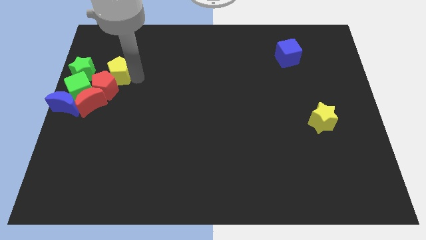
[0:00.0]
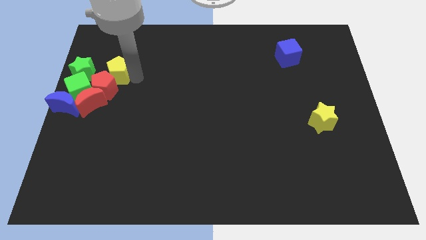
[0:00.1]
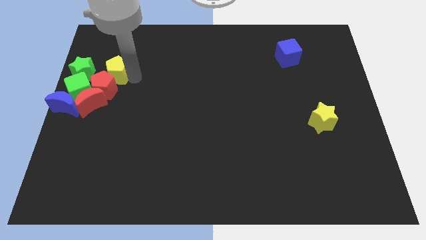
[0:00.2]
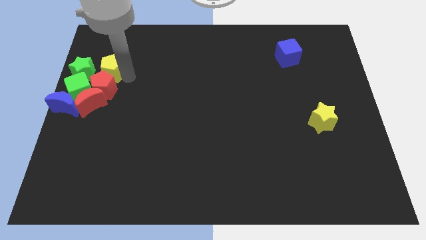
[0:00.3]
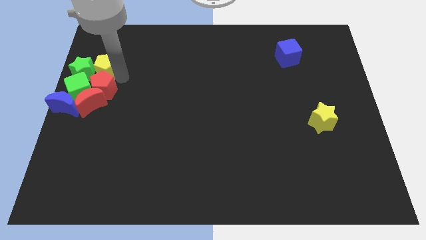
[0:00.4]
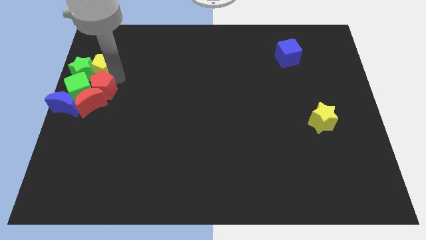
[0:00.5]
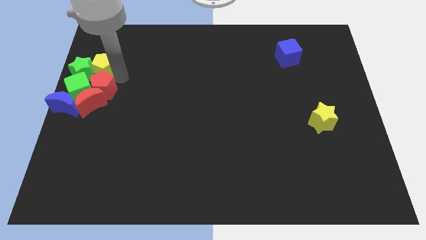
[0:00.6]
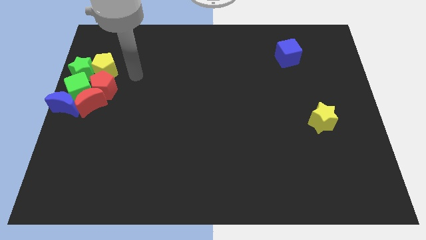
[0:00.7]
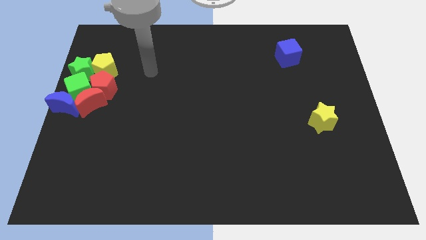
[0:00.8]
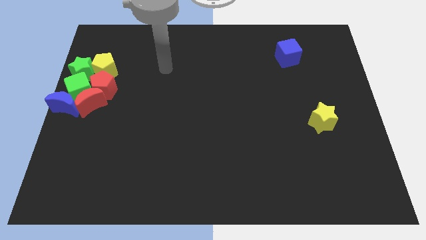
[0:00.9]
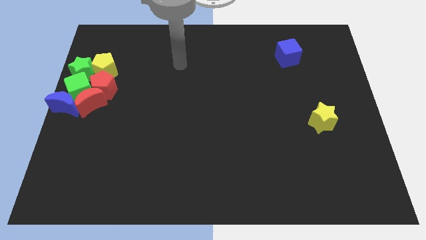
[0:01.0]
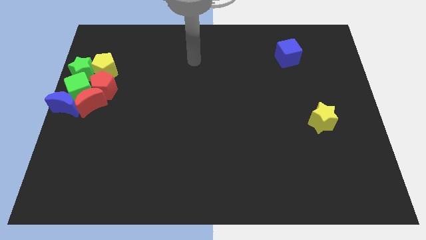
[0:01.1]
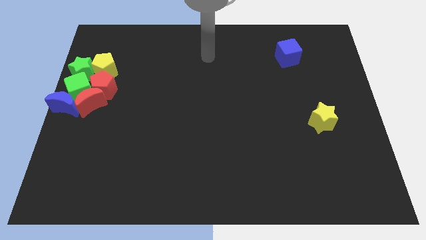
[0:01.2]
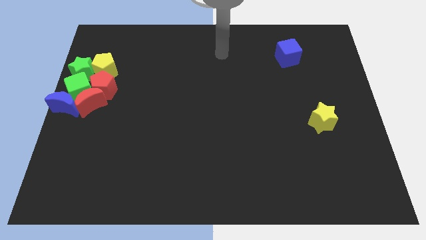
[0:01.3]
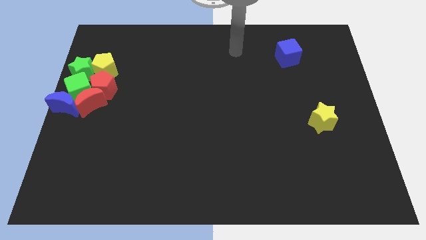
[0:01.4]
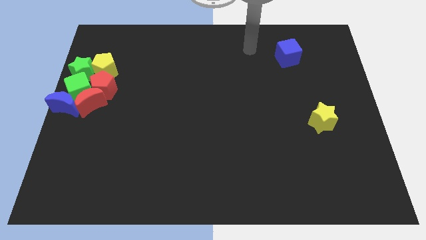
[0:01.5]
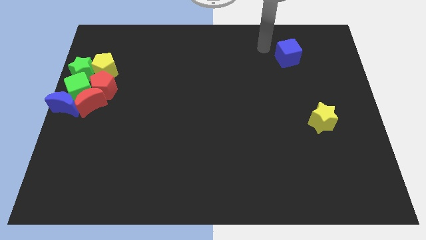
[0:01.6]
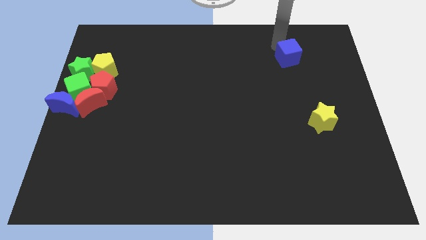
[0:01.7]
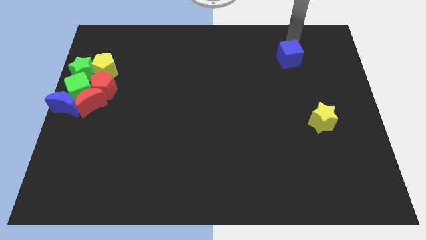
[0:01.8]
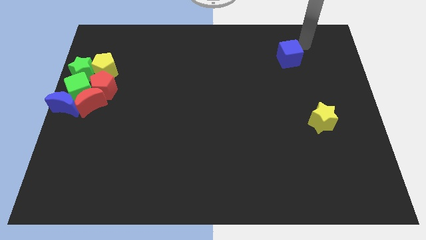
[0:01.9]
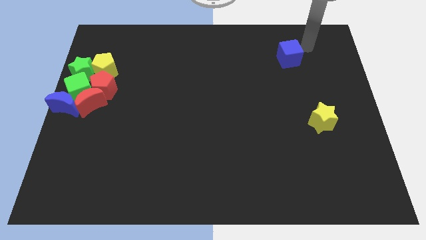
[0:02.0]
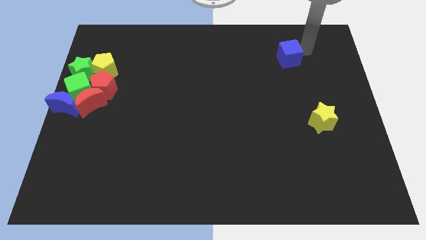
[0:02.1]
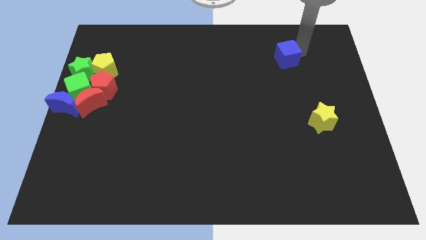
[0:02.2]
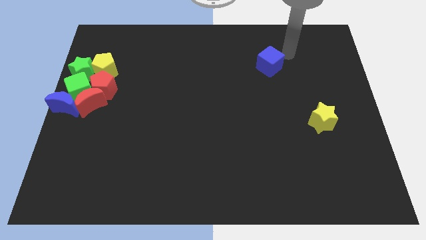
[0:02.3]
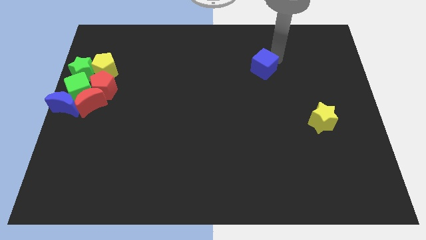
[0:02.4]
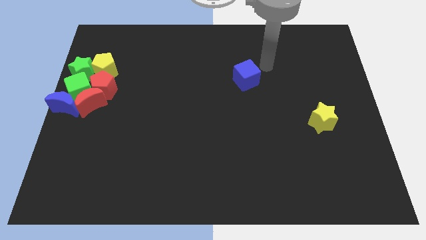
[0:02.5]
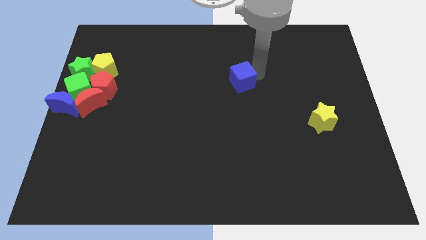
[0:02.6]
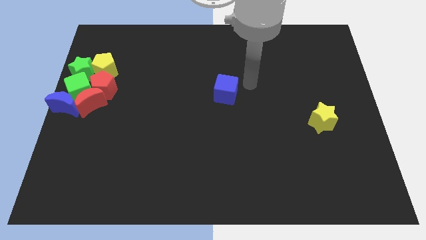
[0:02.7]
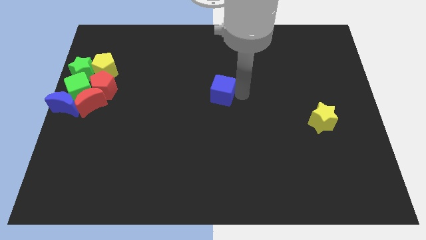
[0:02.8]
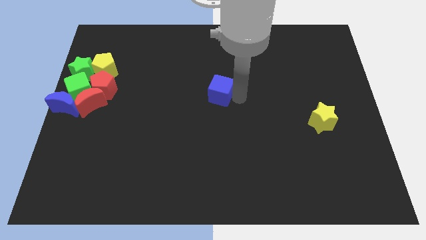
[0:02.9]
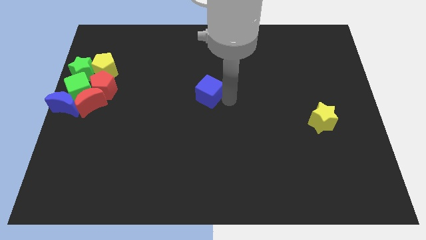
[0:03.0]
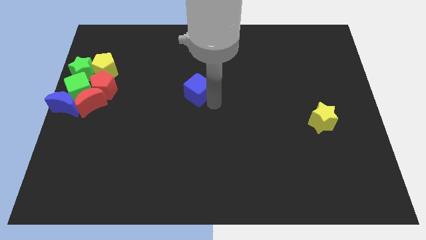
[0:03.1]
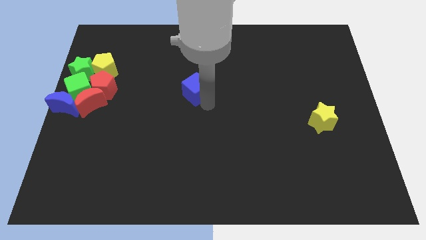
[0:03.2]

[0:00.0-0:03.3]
push the blue cube towards the center

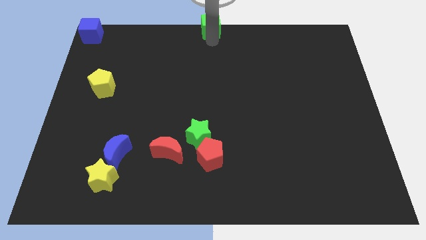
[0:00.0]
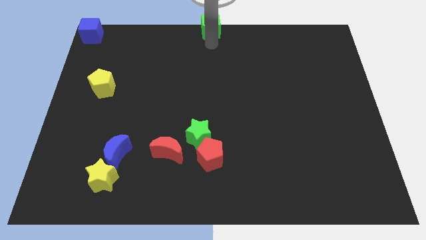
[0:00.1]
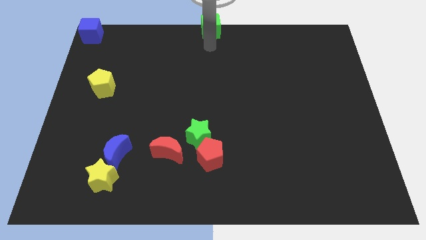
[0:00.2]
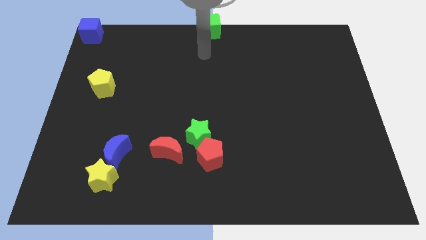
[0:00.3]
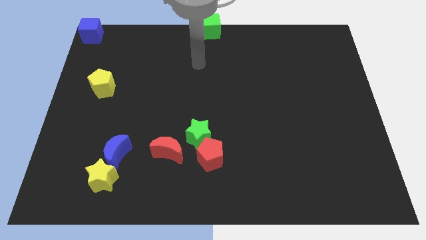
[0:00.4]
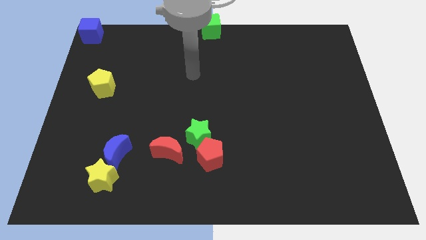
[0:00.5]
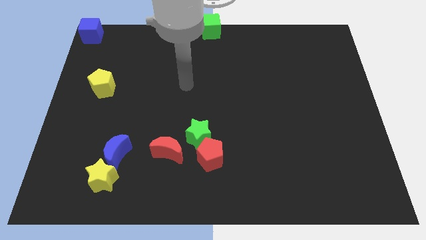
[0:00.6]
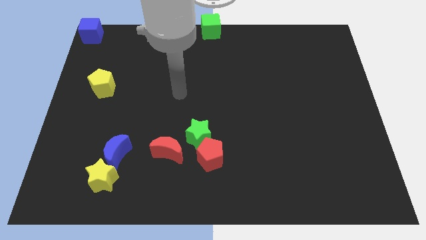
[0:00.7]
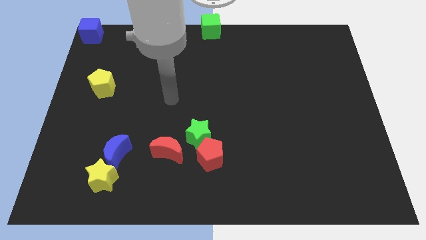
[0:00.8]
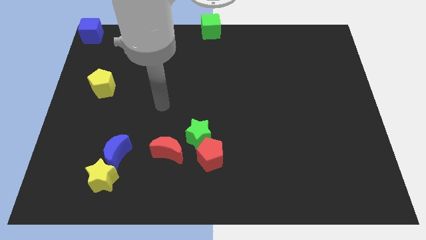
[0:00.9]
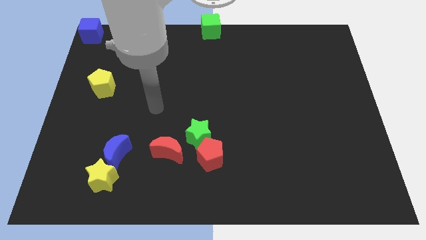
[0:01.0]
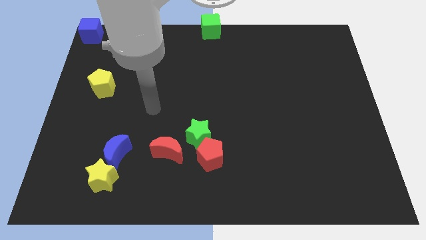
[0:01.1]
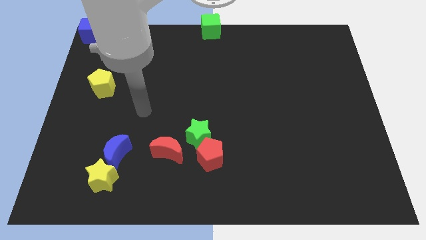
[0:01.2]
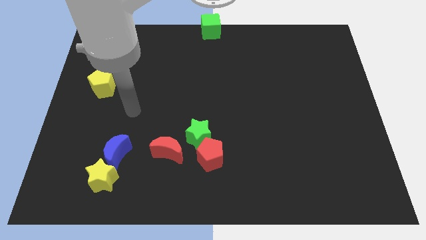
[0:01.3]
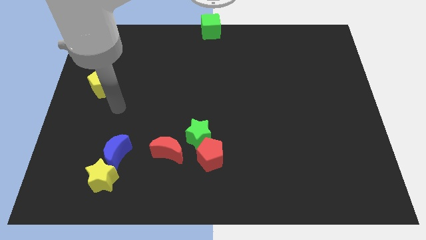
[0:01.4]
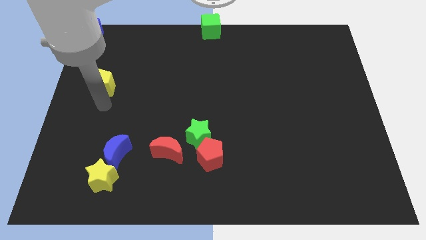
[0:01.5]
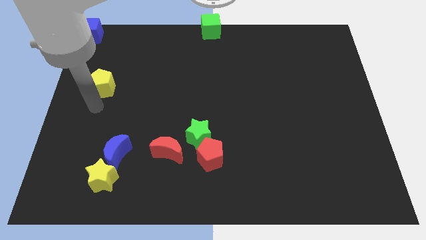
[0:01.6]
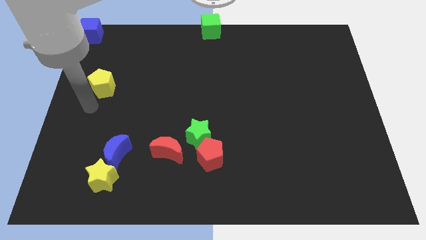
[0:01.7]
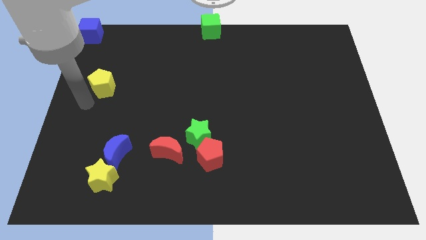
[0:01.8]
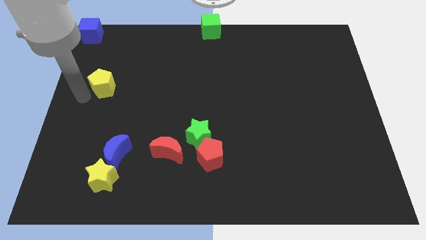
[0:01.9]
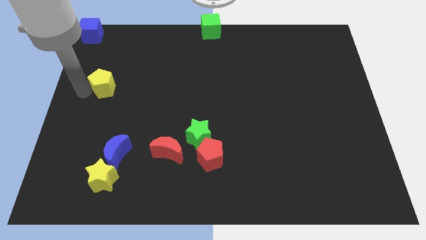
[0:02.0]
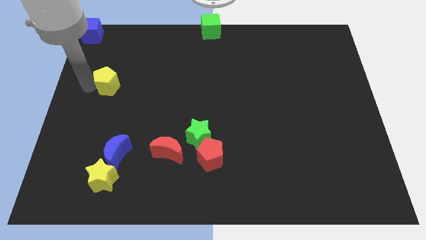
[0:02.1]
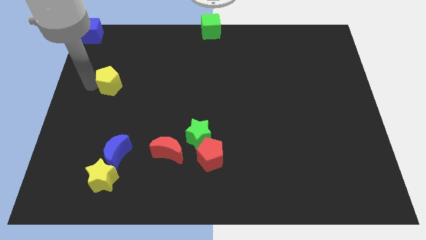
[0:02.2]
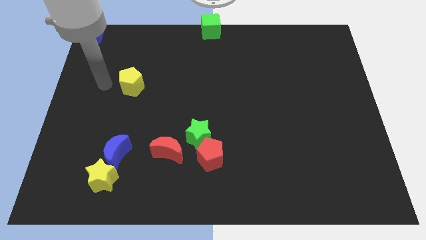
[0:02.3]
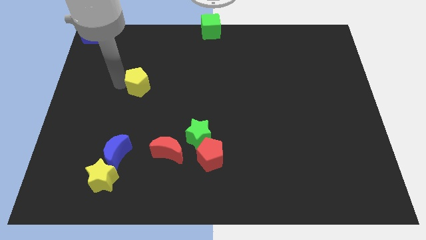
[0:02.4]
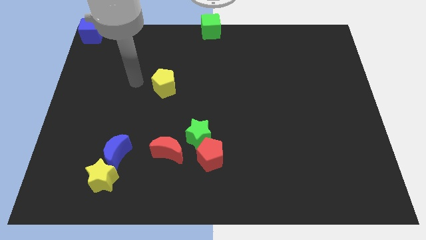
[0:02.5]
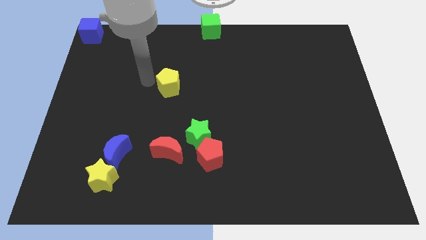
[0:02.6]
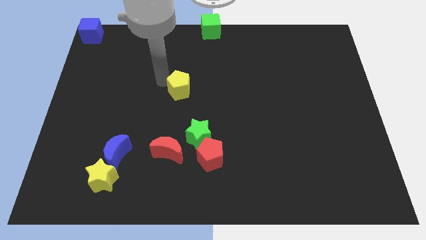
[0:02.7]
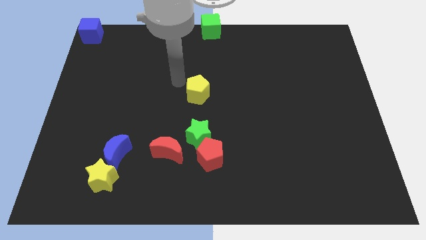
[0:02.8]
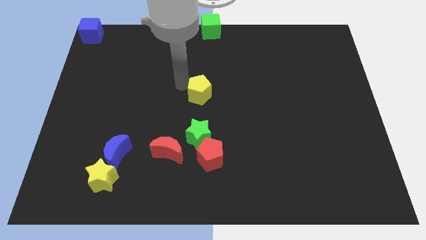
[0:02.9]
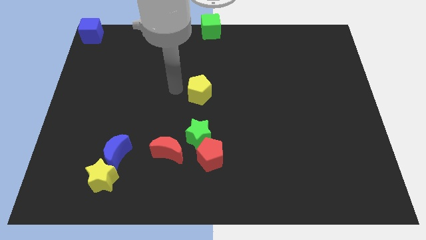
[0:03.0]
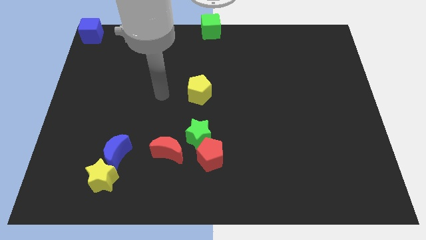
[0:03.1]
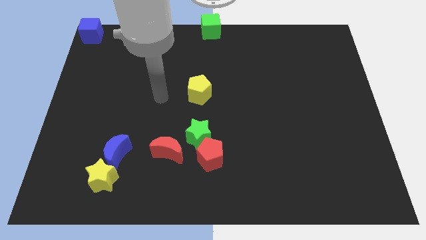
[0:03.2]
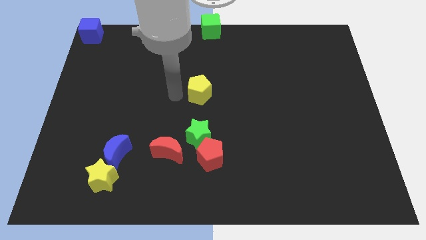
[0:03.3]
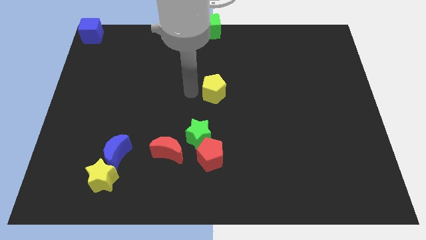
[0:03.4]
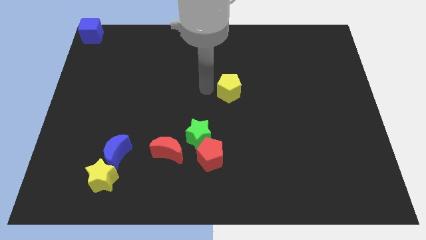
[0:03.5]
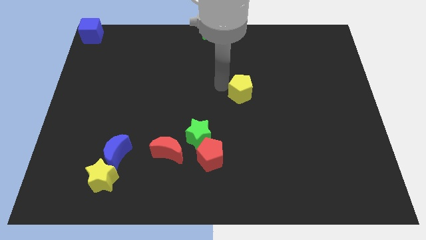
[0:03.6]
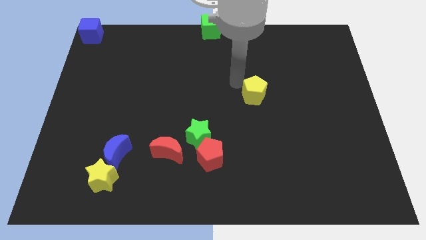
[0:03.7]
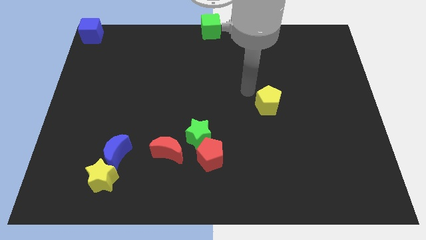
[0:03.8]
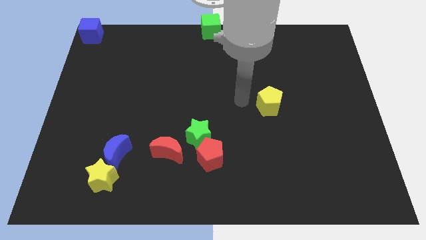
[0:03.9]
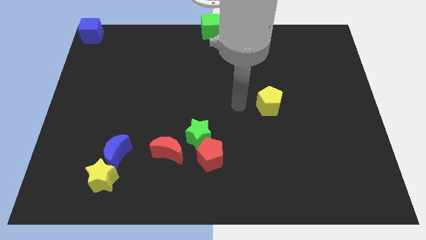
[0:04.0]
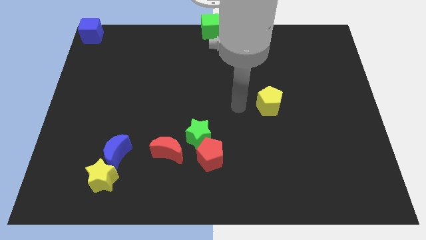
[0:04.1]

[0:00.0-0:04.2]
place the yellow pentagon to the right side of the board

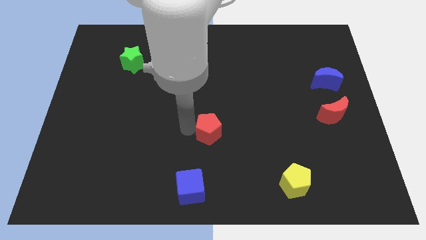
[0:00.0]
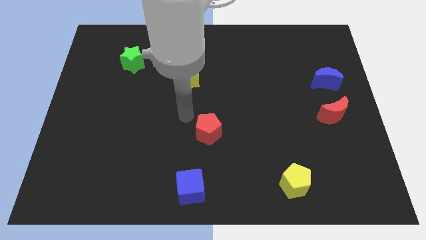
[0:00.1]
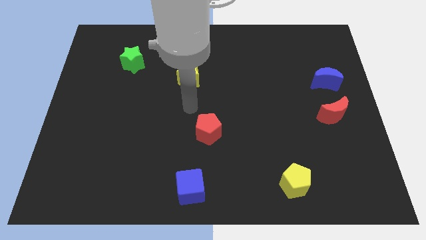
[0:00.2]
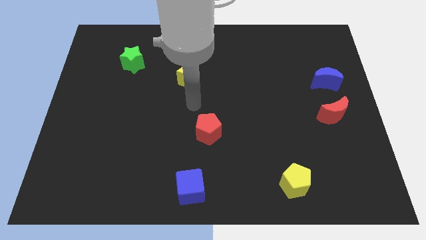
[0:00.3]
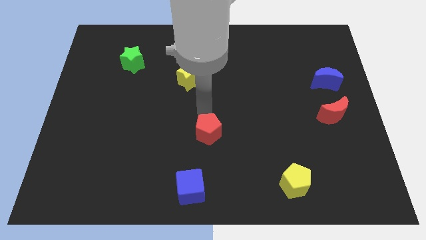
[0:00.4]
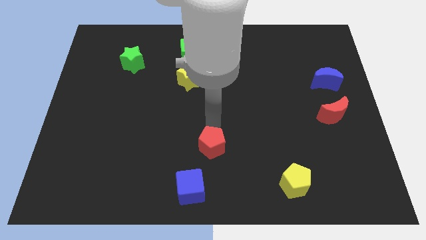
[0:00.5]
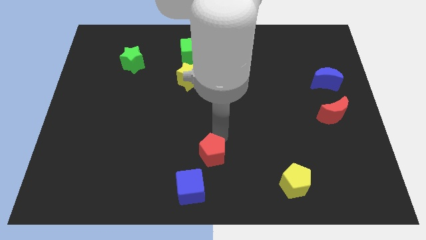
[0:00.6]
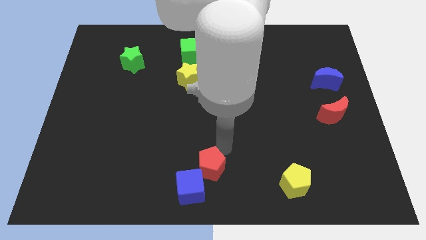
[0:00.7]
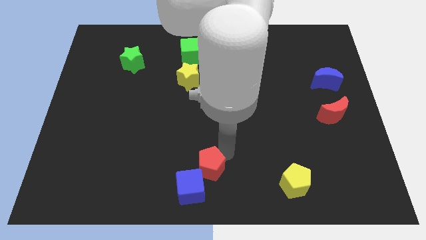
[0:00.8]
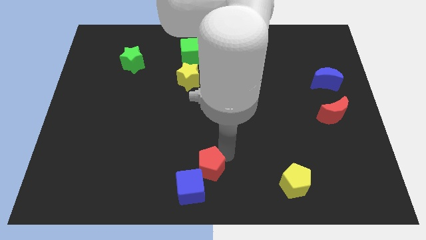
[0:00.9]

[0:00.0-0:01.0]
push the red pentagon to the top right of the blue cube

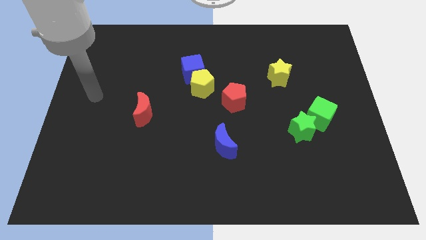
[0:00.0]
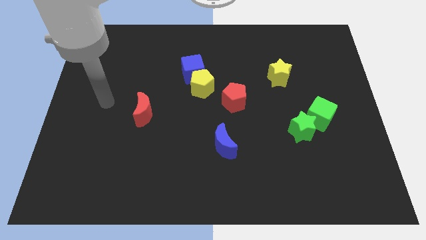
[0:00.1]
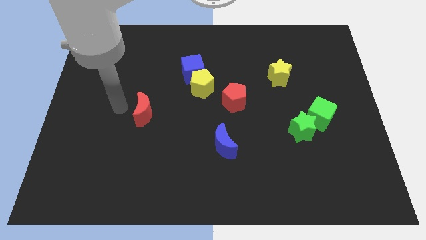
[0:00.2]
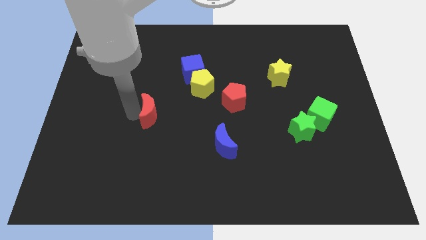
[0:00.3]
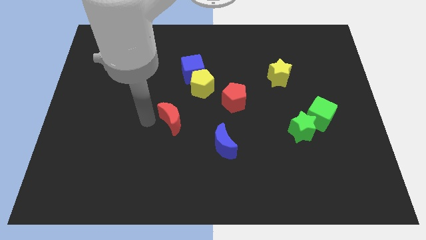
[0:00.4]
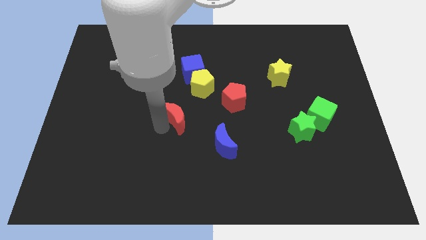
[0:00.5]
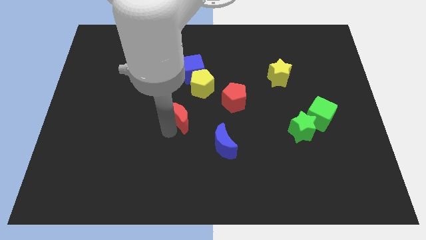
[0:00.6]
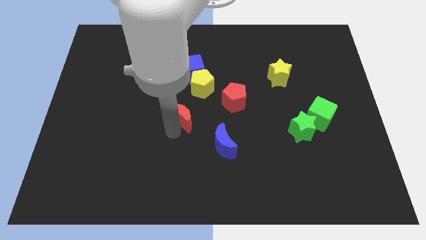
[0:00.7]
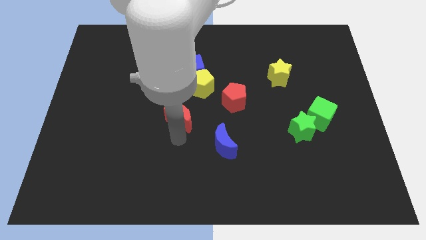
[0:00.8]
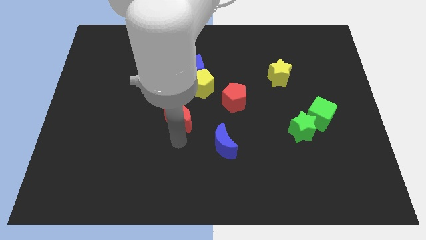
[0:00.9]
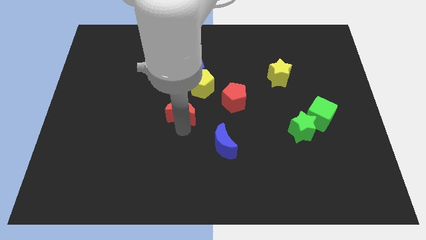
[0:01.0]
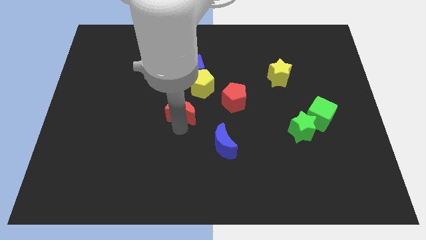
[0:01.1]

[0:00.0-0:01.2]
push the red moon towards the center of the board
